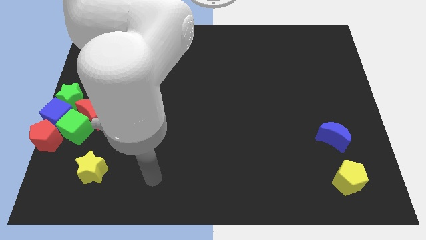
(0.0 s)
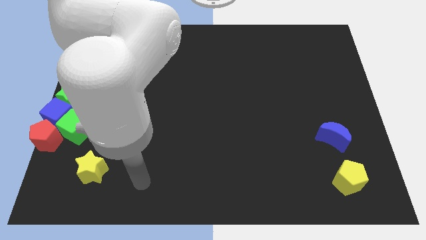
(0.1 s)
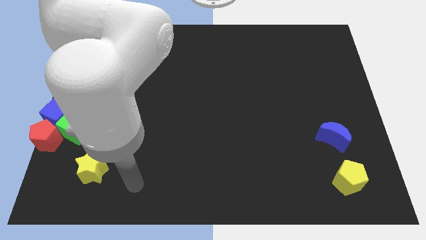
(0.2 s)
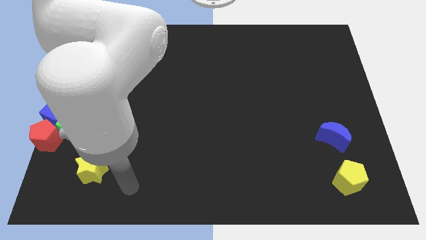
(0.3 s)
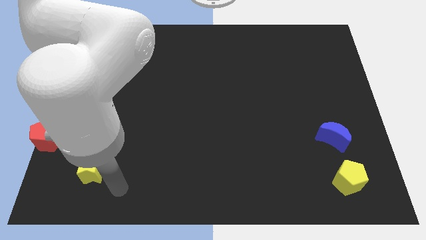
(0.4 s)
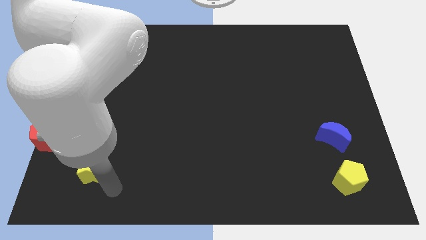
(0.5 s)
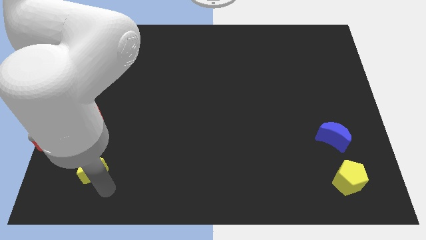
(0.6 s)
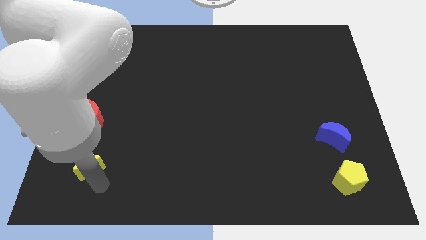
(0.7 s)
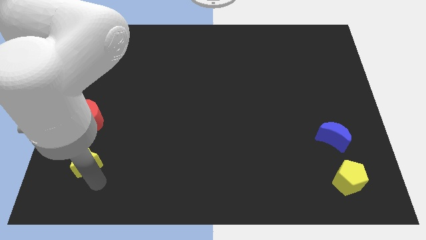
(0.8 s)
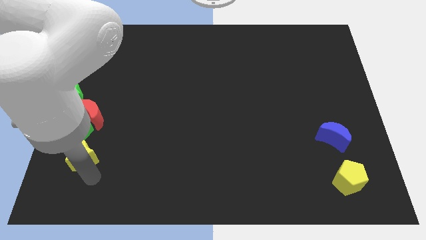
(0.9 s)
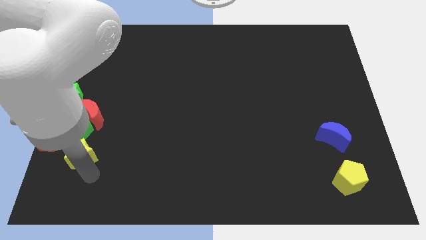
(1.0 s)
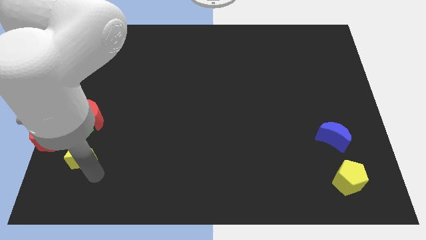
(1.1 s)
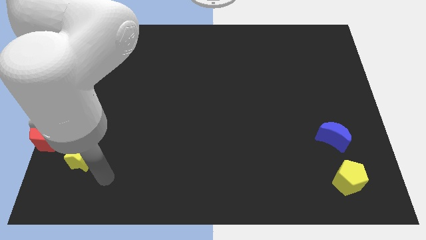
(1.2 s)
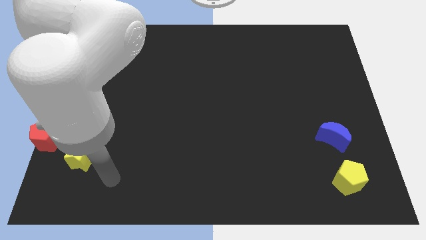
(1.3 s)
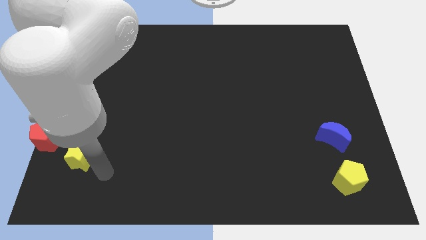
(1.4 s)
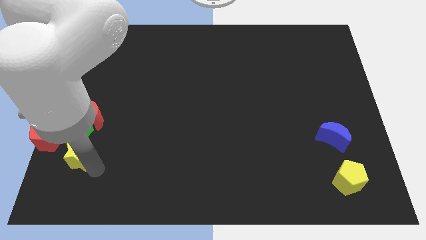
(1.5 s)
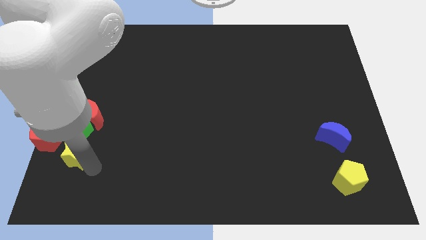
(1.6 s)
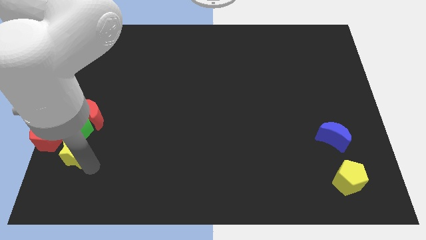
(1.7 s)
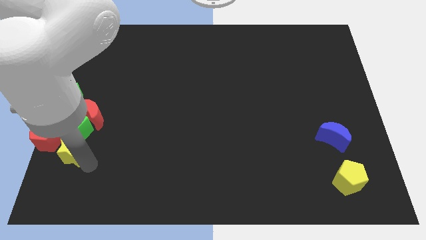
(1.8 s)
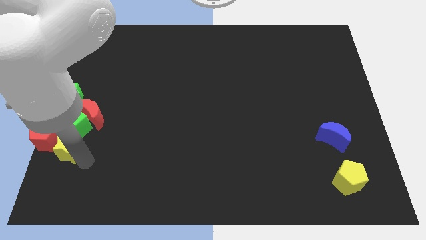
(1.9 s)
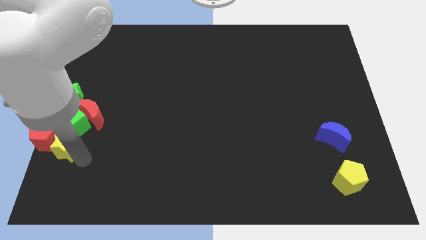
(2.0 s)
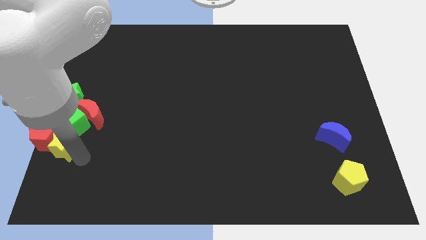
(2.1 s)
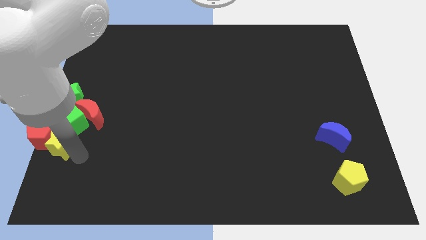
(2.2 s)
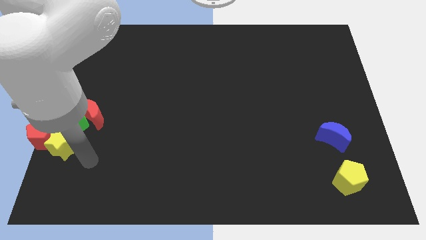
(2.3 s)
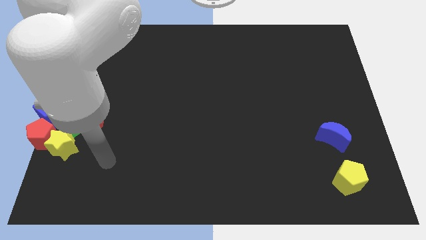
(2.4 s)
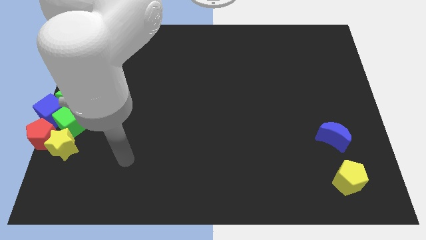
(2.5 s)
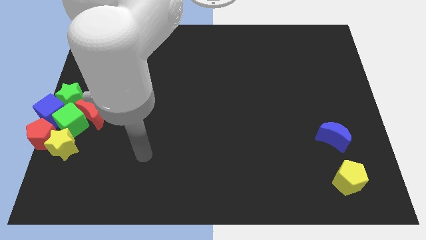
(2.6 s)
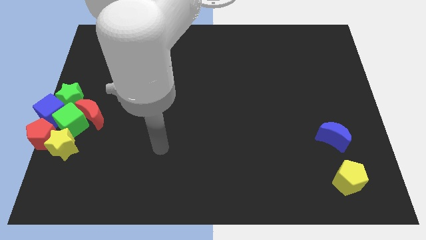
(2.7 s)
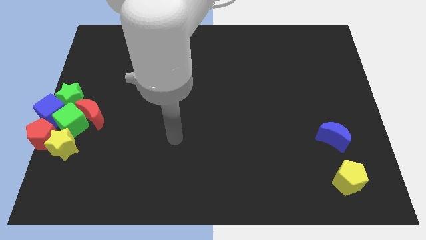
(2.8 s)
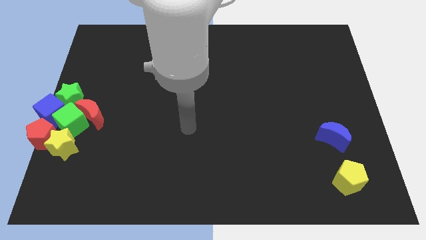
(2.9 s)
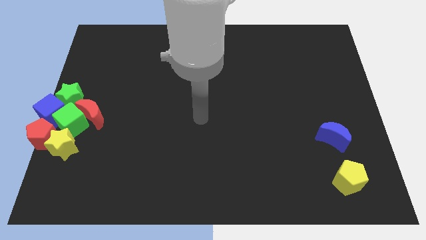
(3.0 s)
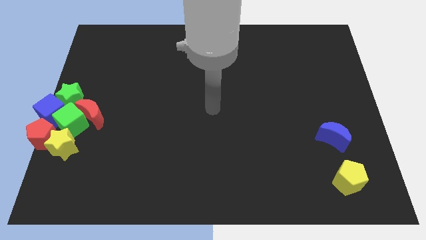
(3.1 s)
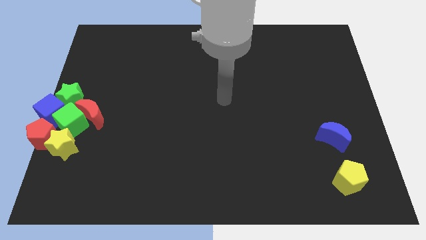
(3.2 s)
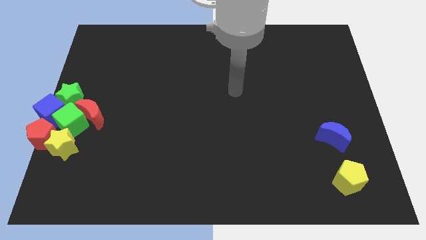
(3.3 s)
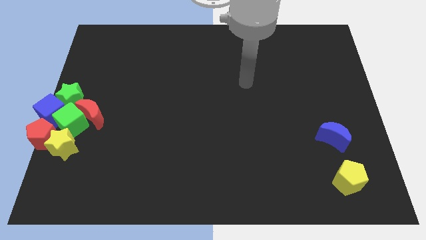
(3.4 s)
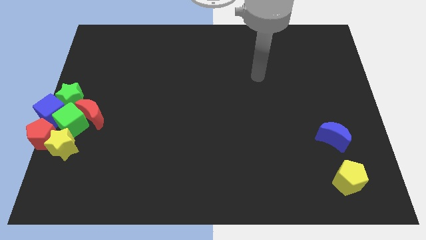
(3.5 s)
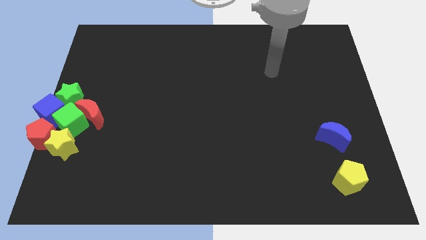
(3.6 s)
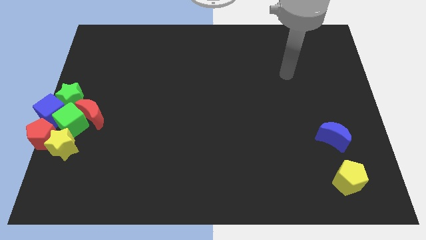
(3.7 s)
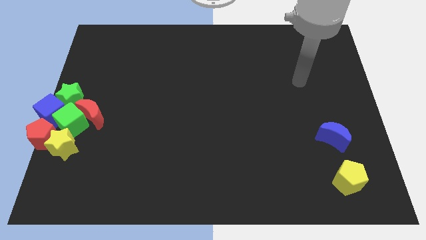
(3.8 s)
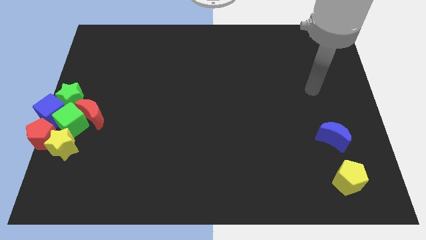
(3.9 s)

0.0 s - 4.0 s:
move yellow star into the group of blocks

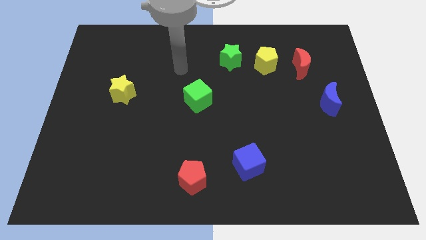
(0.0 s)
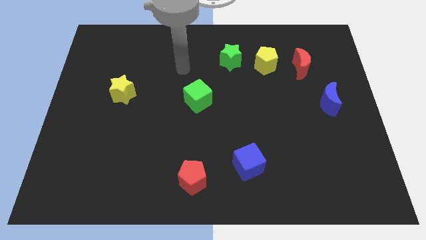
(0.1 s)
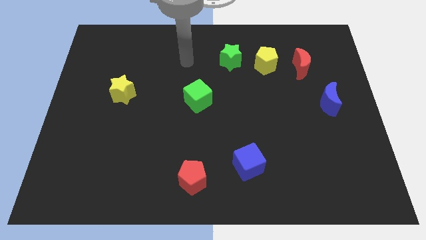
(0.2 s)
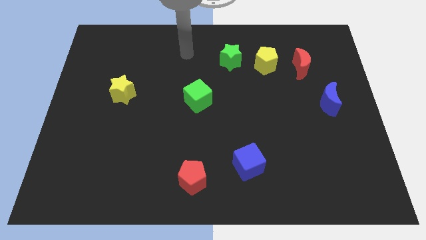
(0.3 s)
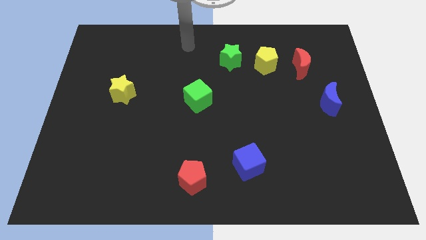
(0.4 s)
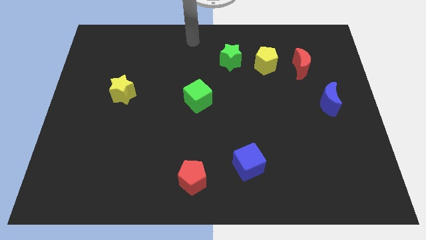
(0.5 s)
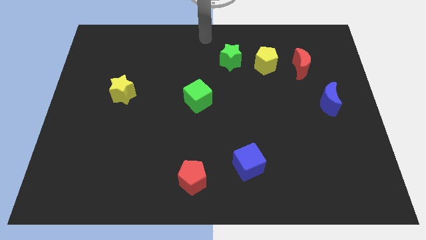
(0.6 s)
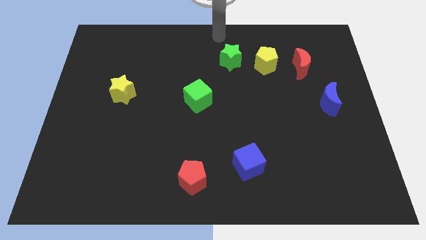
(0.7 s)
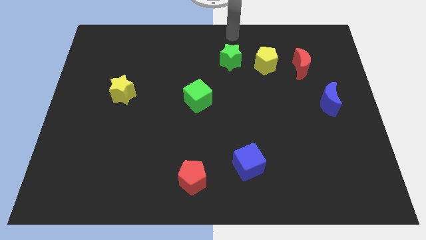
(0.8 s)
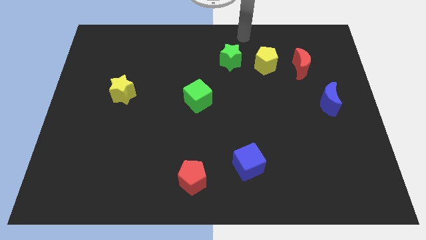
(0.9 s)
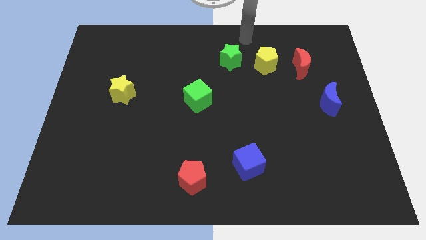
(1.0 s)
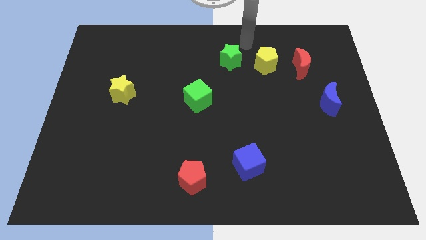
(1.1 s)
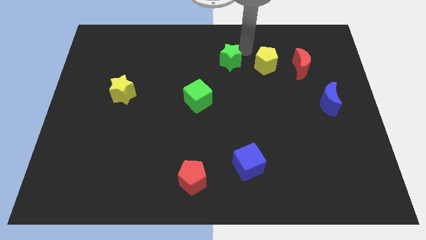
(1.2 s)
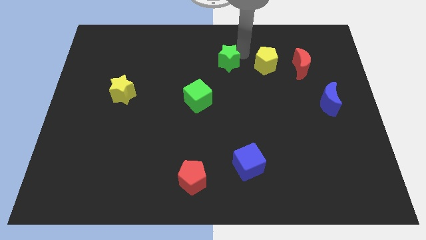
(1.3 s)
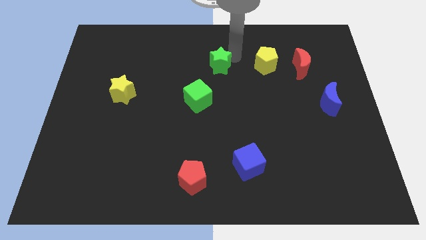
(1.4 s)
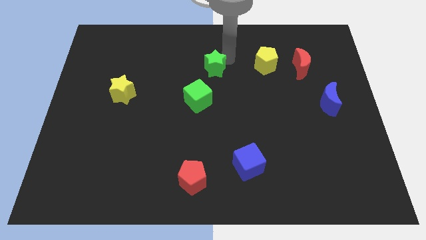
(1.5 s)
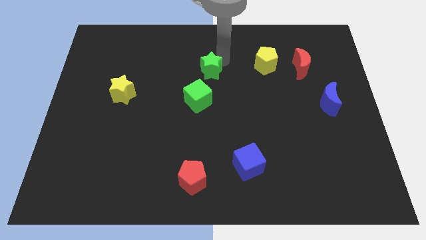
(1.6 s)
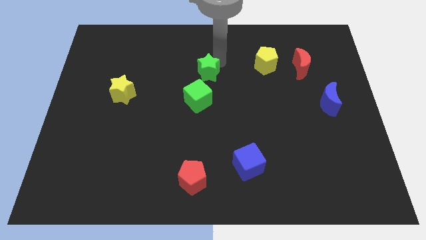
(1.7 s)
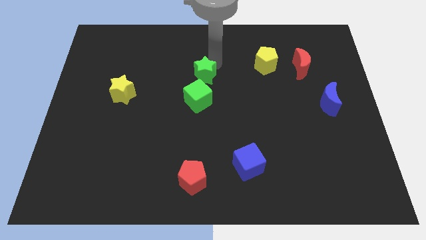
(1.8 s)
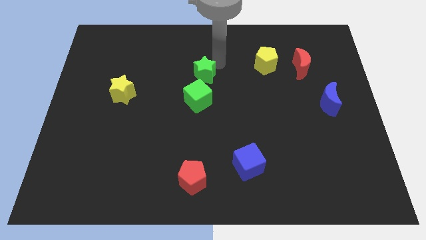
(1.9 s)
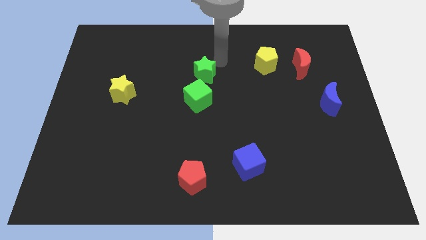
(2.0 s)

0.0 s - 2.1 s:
slide green star on top of green cube

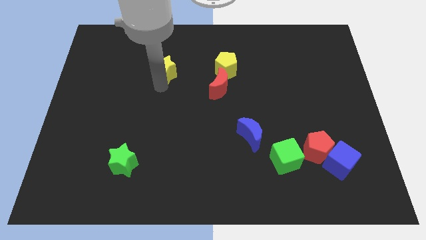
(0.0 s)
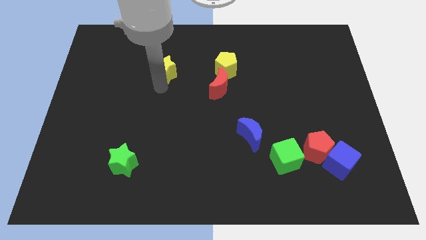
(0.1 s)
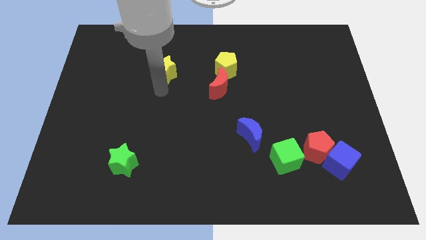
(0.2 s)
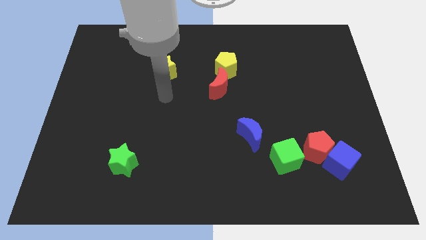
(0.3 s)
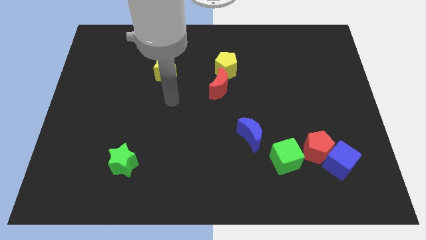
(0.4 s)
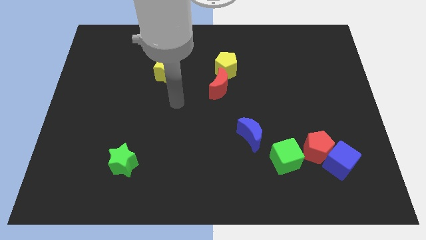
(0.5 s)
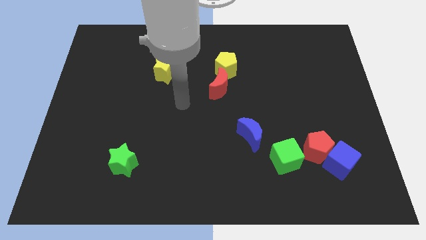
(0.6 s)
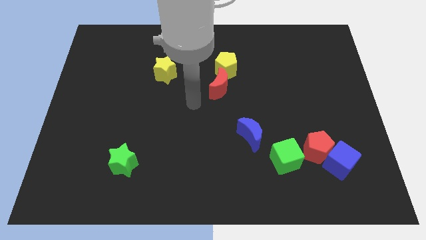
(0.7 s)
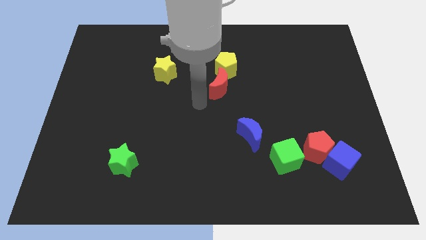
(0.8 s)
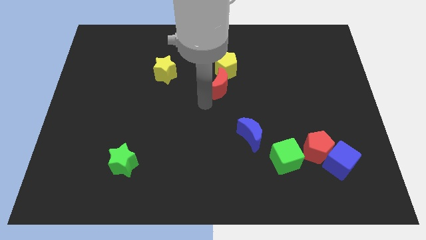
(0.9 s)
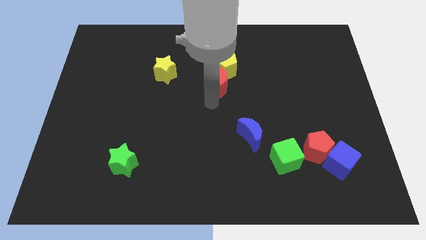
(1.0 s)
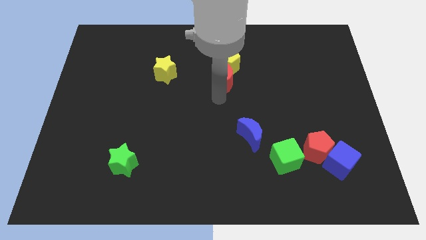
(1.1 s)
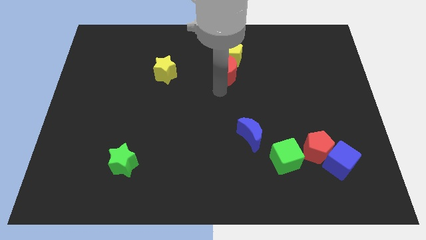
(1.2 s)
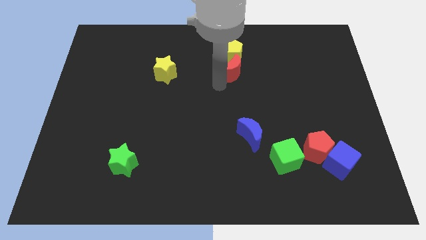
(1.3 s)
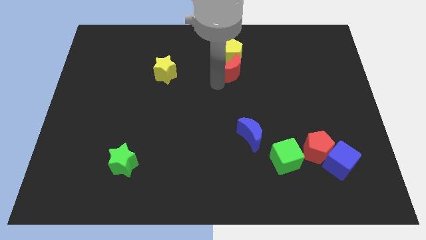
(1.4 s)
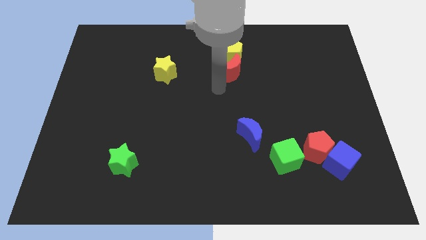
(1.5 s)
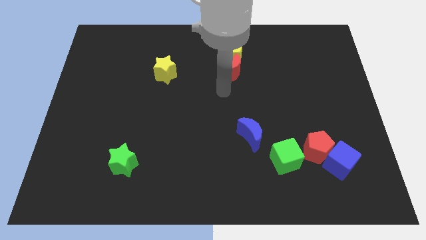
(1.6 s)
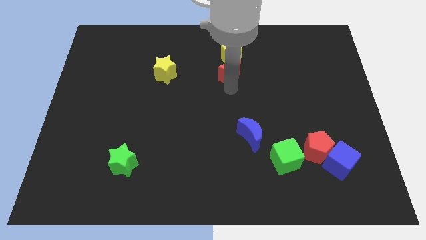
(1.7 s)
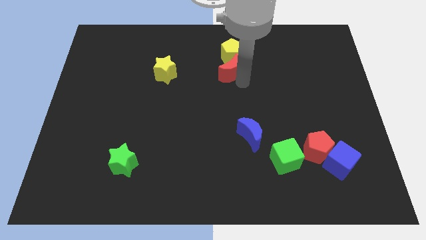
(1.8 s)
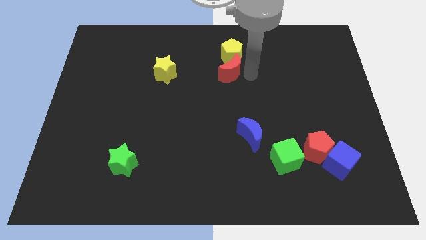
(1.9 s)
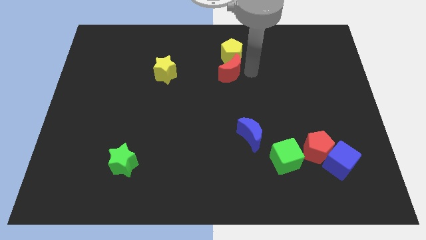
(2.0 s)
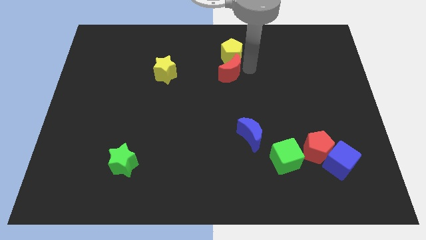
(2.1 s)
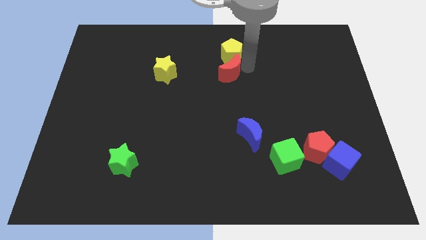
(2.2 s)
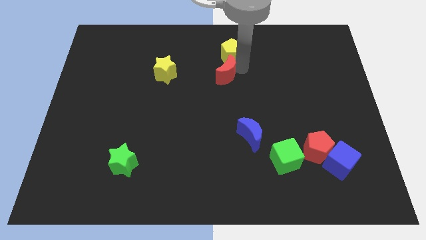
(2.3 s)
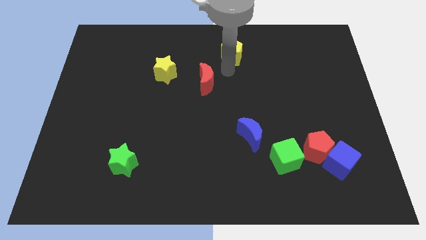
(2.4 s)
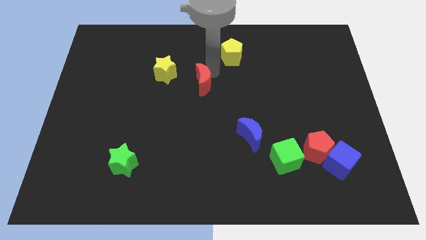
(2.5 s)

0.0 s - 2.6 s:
push the red moon into the yellow pentagon

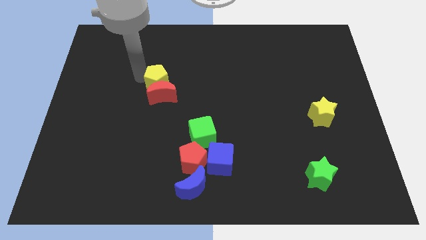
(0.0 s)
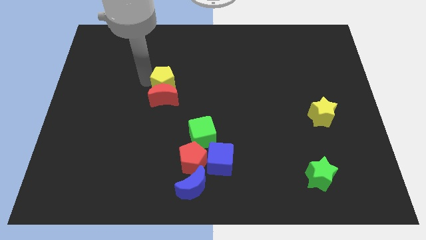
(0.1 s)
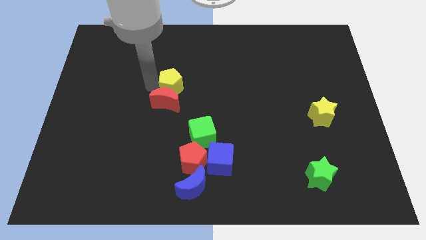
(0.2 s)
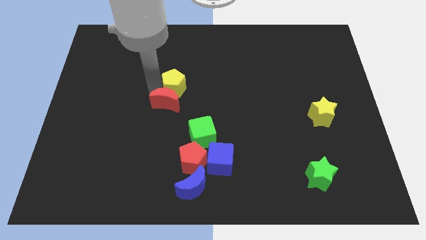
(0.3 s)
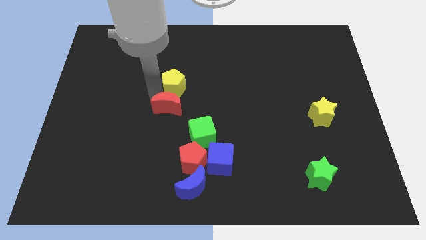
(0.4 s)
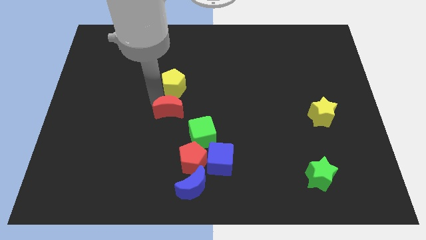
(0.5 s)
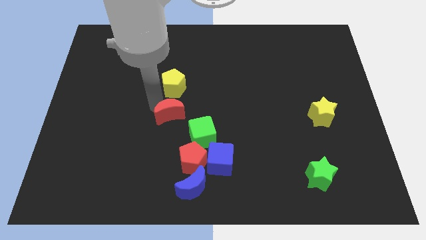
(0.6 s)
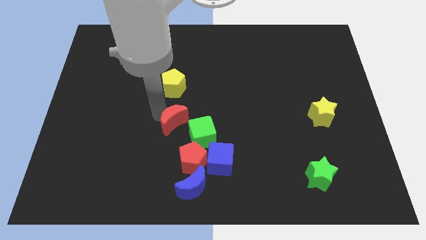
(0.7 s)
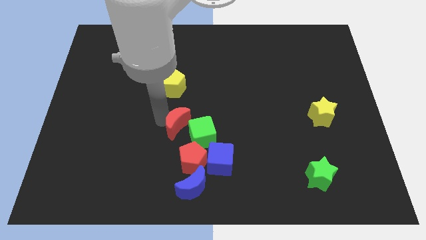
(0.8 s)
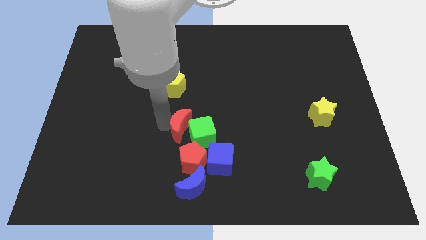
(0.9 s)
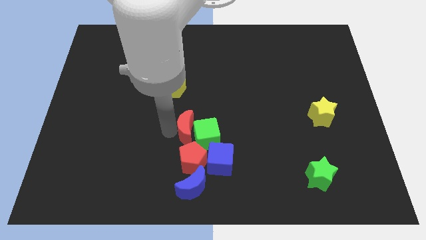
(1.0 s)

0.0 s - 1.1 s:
separate red moon from yellow pentagon
